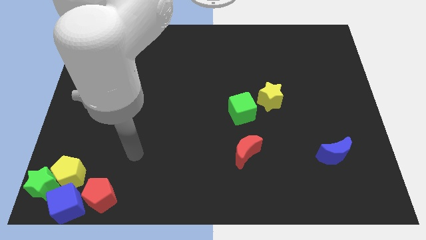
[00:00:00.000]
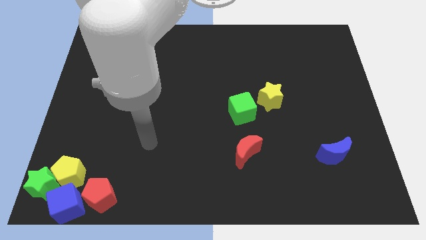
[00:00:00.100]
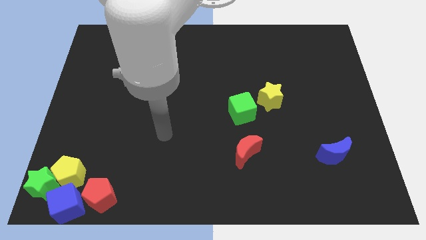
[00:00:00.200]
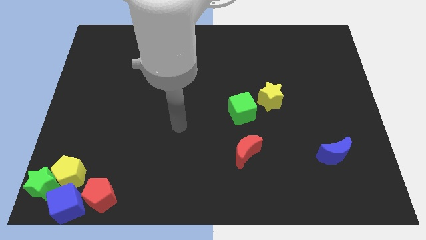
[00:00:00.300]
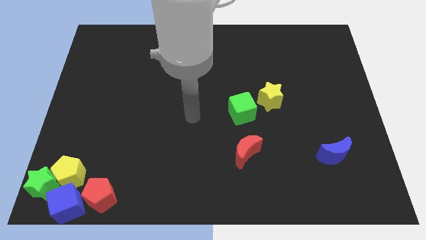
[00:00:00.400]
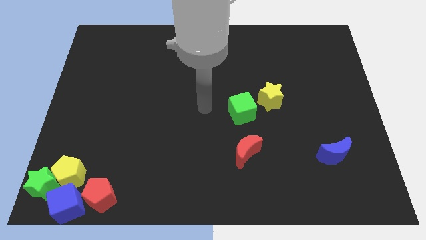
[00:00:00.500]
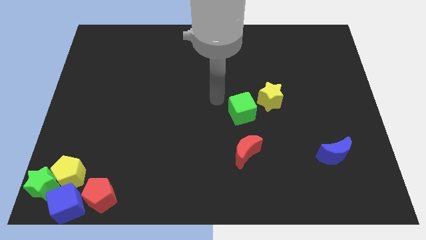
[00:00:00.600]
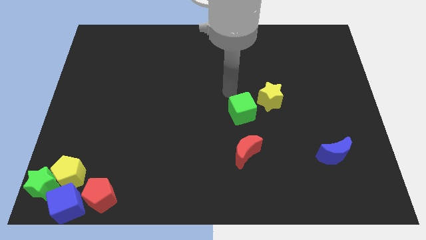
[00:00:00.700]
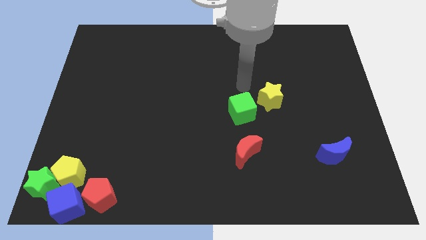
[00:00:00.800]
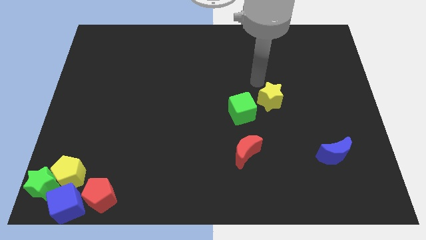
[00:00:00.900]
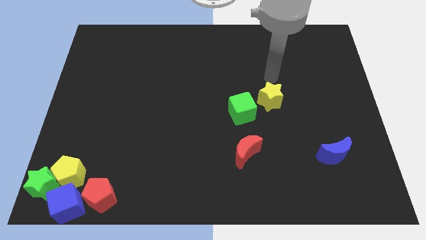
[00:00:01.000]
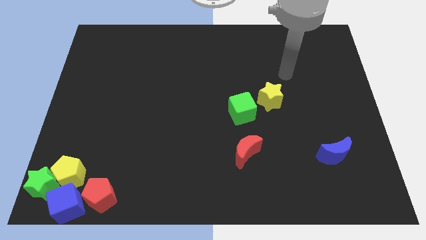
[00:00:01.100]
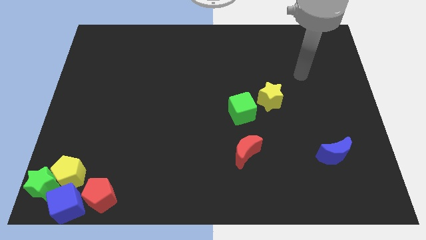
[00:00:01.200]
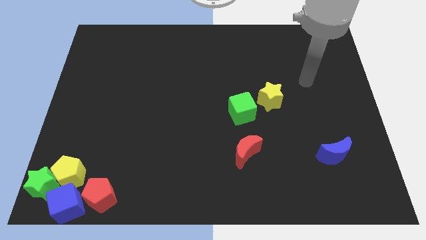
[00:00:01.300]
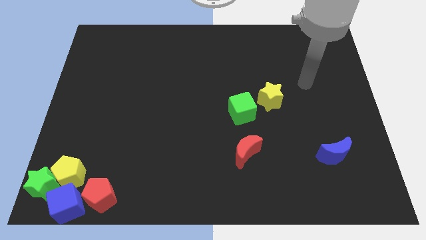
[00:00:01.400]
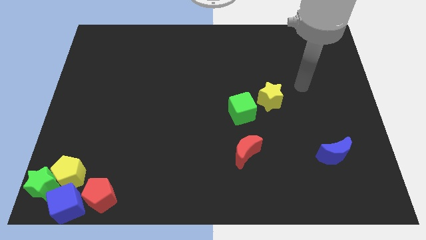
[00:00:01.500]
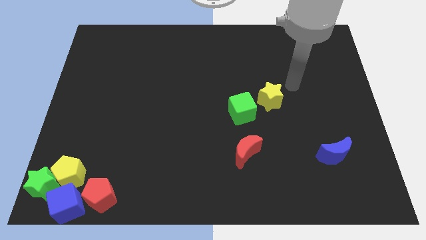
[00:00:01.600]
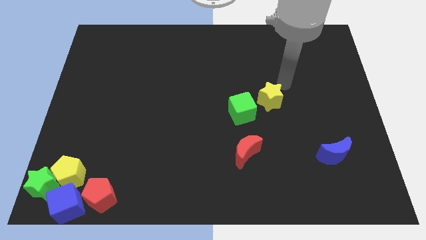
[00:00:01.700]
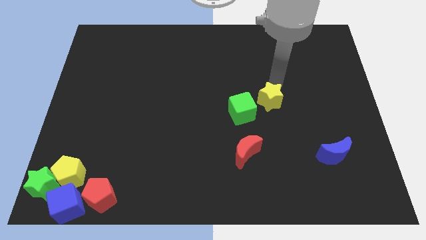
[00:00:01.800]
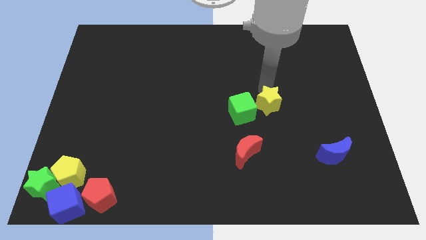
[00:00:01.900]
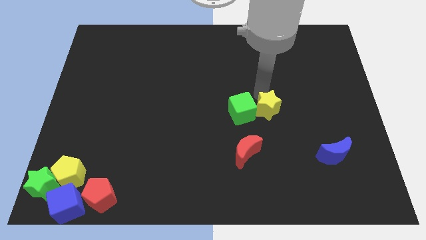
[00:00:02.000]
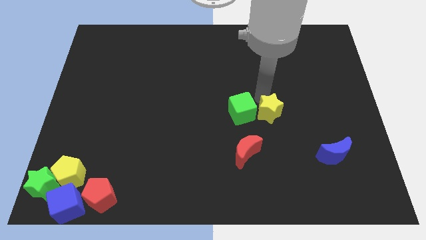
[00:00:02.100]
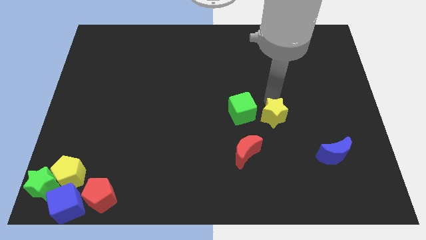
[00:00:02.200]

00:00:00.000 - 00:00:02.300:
push the yellow star to the right of the green cube

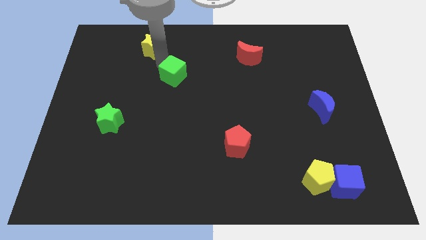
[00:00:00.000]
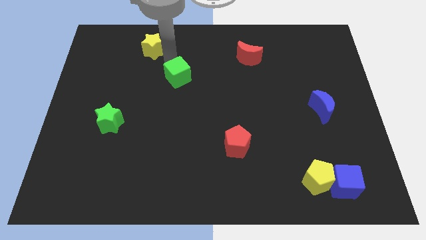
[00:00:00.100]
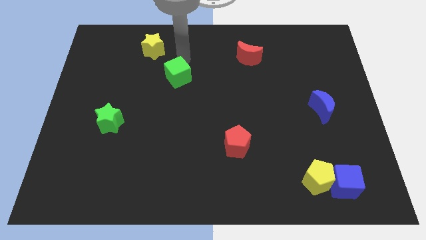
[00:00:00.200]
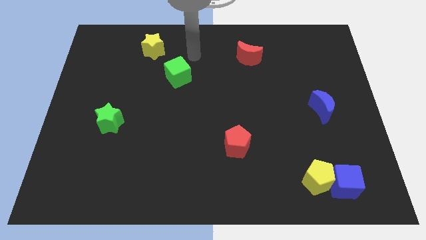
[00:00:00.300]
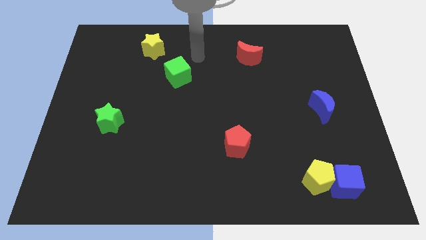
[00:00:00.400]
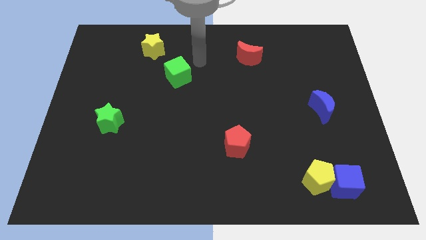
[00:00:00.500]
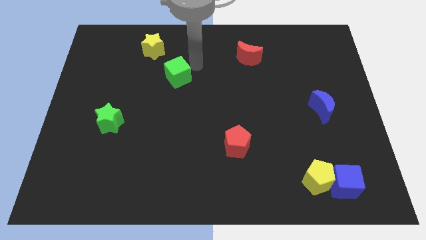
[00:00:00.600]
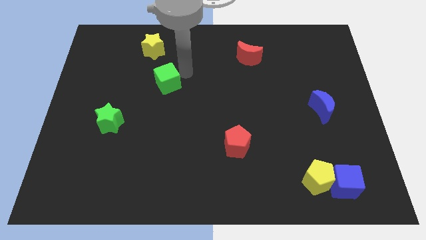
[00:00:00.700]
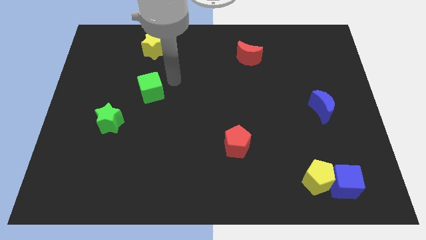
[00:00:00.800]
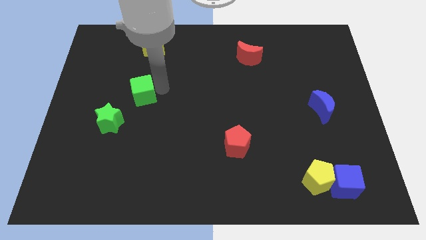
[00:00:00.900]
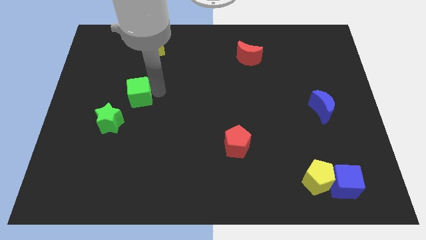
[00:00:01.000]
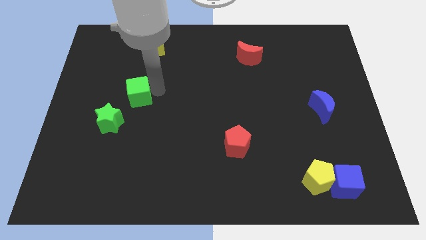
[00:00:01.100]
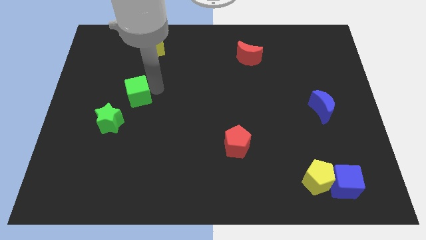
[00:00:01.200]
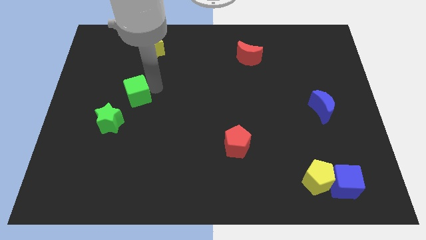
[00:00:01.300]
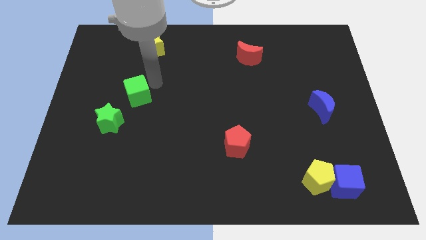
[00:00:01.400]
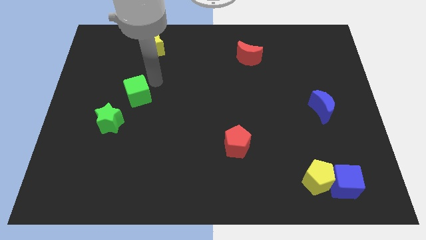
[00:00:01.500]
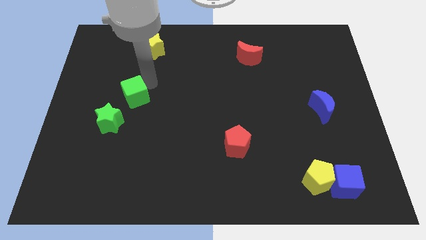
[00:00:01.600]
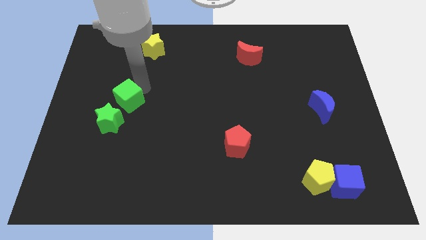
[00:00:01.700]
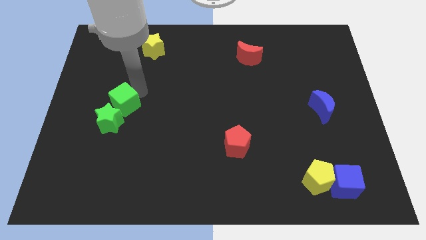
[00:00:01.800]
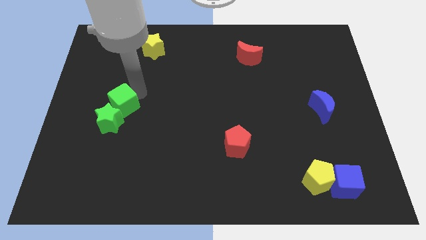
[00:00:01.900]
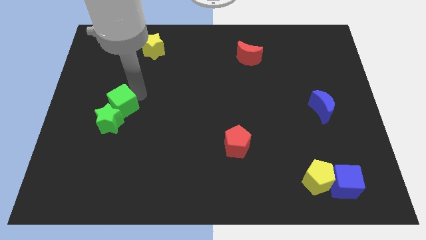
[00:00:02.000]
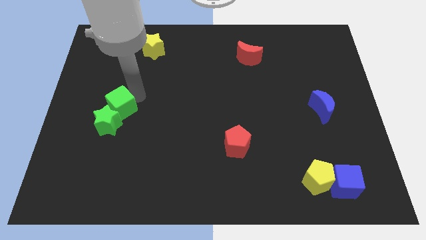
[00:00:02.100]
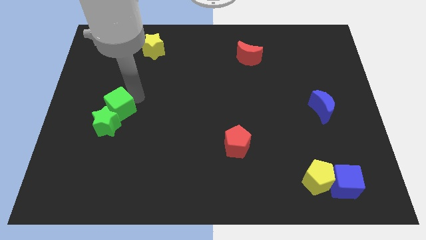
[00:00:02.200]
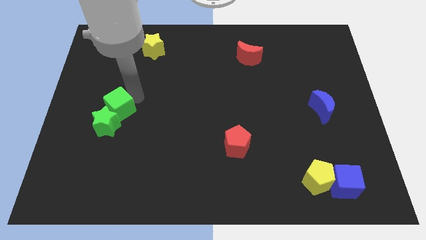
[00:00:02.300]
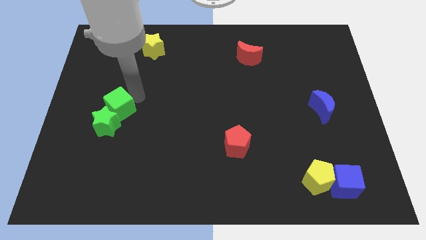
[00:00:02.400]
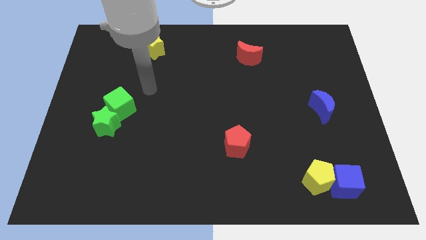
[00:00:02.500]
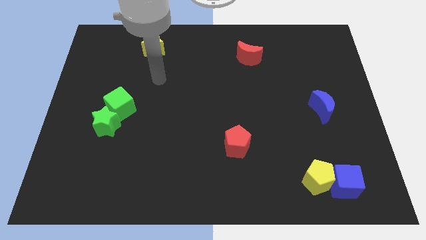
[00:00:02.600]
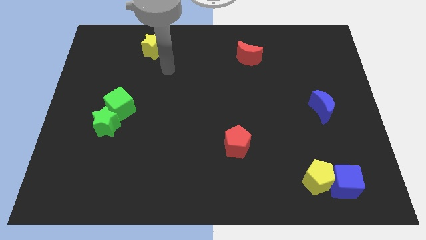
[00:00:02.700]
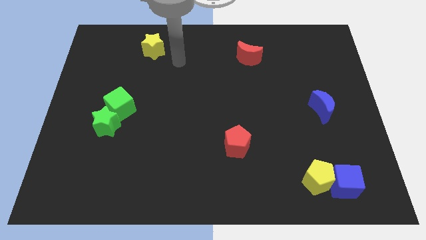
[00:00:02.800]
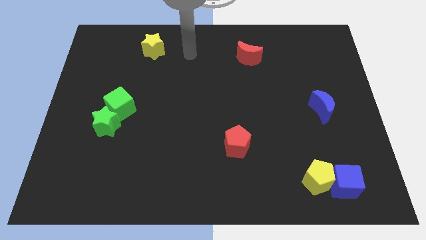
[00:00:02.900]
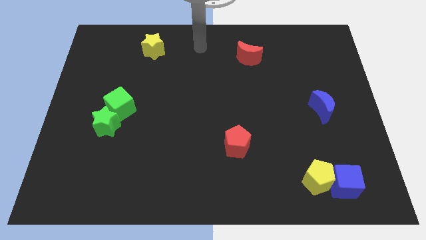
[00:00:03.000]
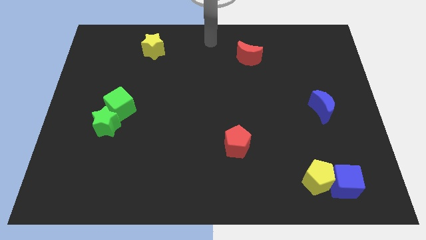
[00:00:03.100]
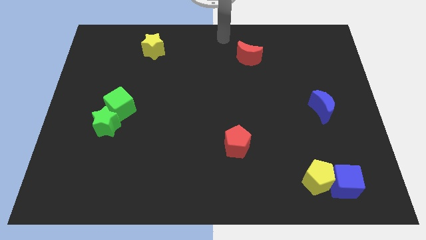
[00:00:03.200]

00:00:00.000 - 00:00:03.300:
put the green cube on the top right of the green star

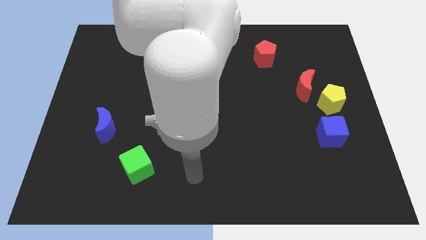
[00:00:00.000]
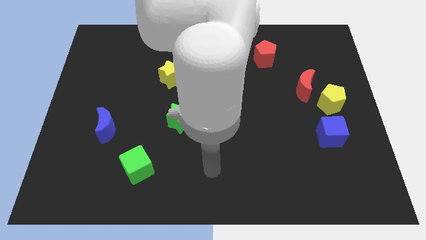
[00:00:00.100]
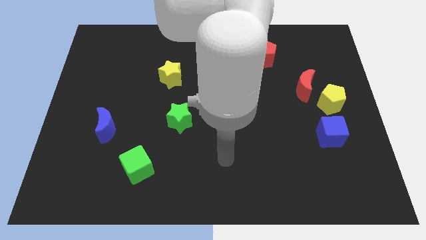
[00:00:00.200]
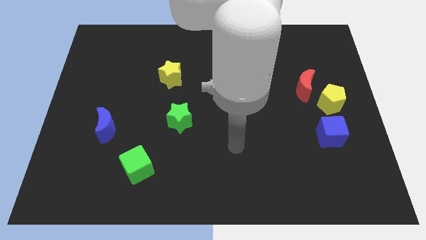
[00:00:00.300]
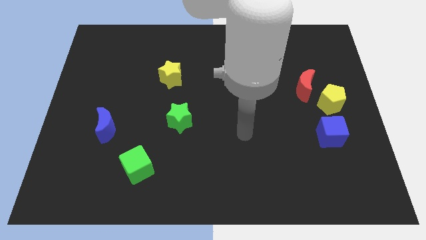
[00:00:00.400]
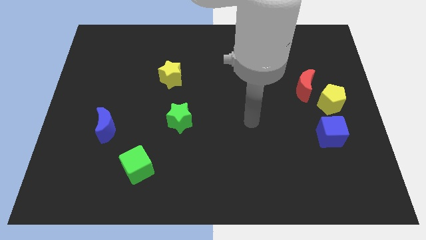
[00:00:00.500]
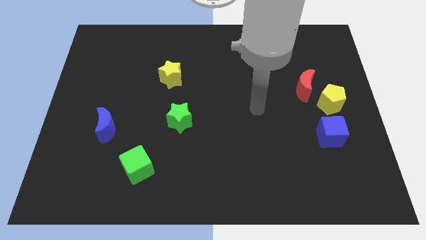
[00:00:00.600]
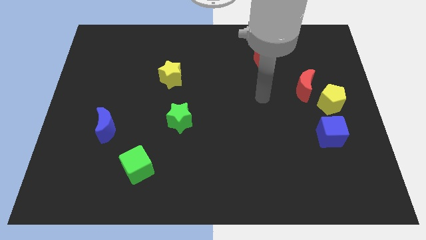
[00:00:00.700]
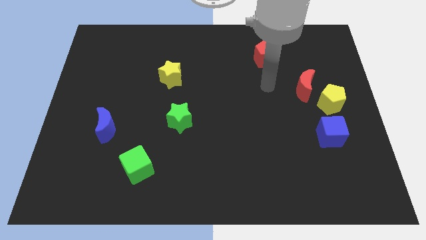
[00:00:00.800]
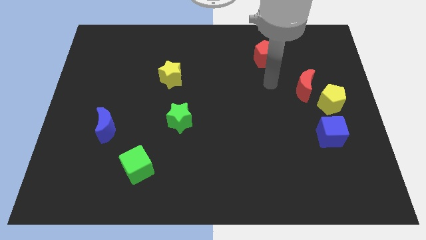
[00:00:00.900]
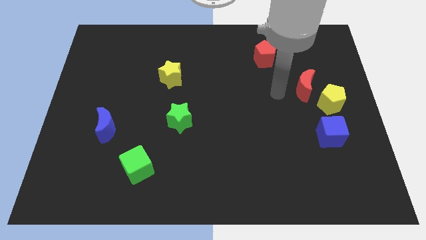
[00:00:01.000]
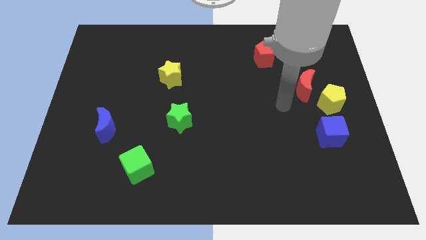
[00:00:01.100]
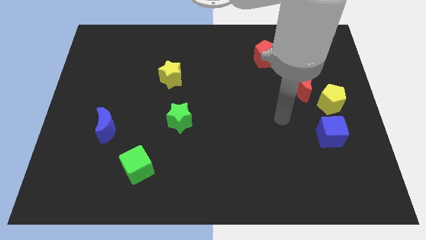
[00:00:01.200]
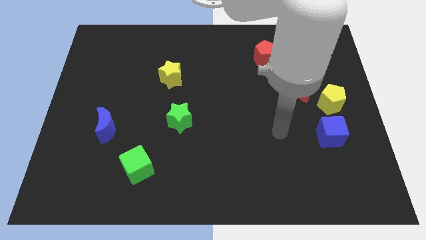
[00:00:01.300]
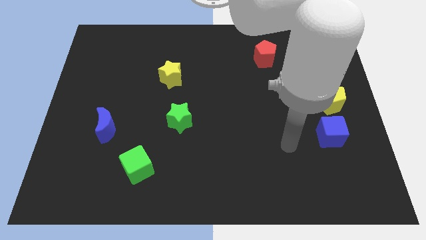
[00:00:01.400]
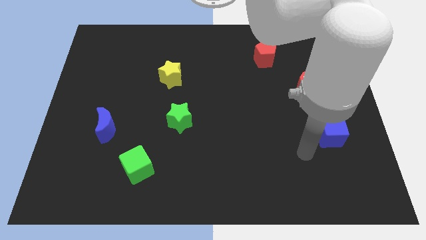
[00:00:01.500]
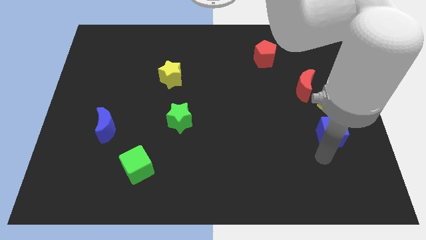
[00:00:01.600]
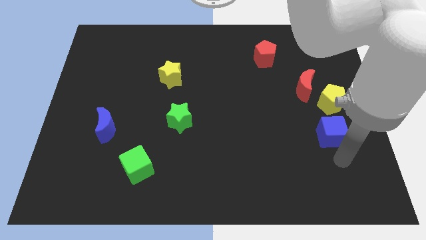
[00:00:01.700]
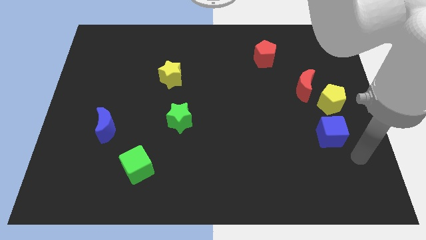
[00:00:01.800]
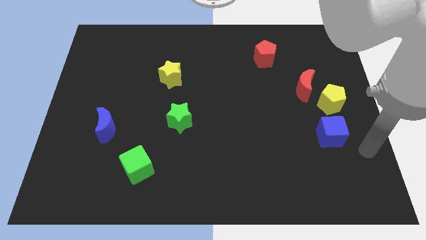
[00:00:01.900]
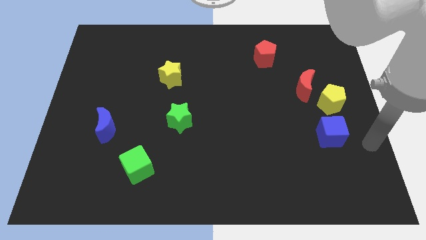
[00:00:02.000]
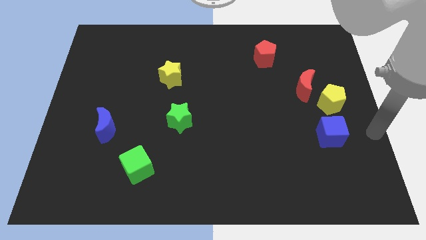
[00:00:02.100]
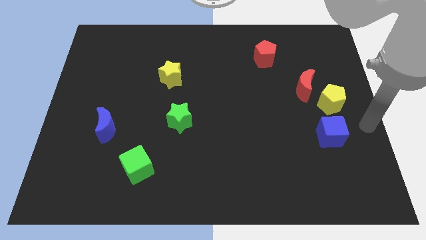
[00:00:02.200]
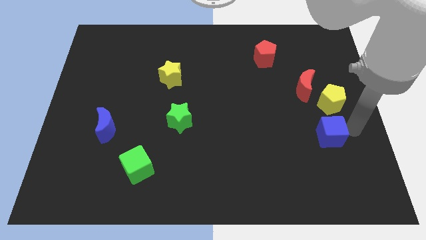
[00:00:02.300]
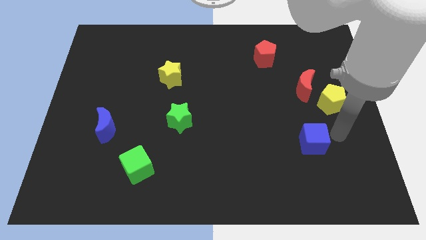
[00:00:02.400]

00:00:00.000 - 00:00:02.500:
push the blue cube slightly left side

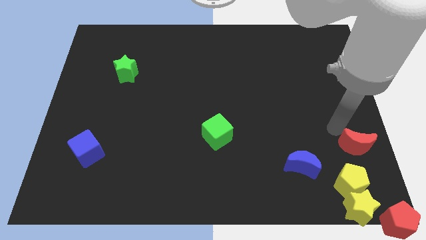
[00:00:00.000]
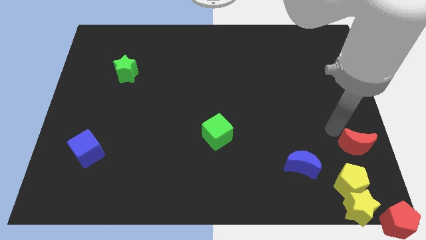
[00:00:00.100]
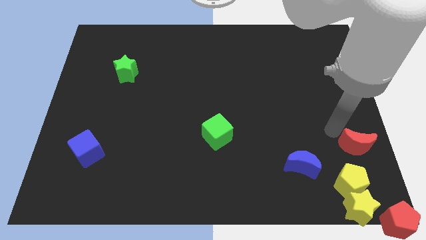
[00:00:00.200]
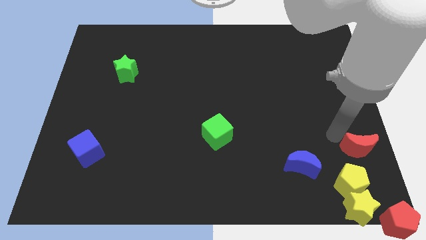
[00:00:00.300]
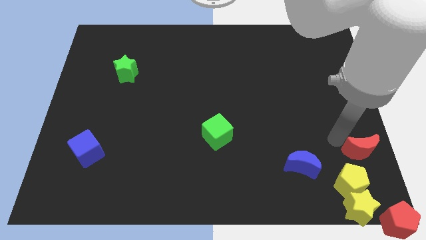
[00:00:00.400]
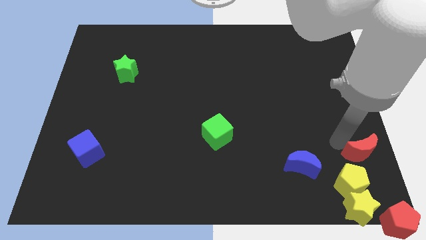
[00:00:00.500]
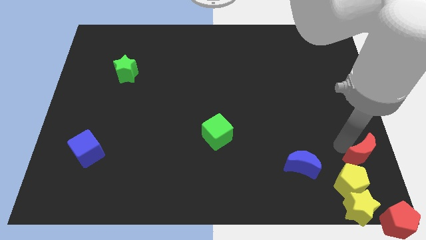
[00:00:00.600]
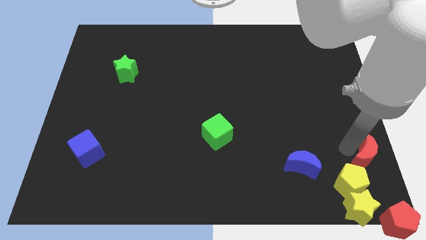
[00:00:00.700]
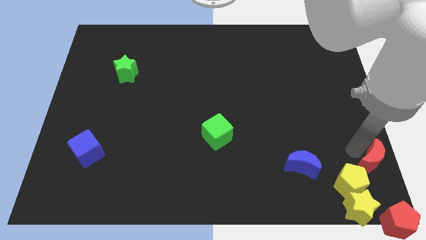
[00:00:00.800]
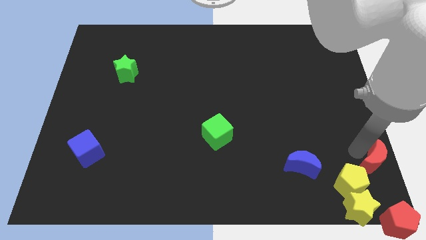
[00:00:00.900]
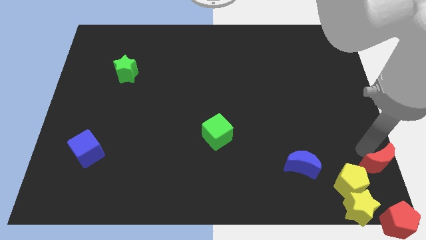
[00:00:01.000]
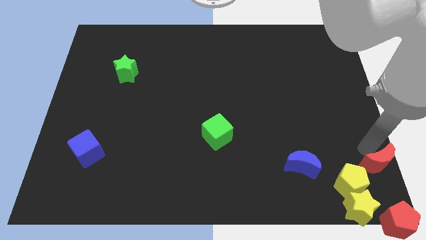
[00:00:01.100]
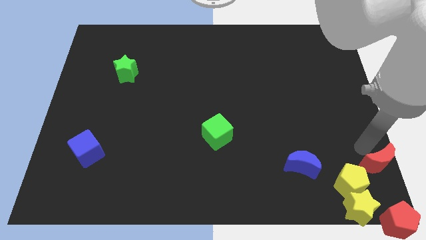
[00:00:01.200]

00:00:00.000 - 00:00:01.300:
put the red moon at the top right of the yellow pentagon
